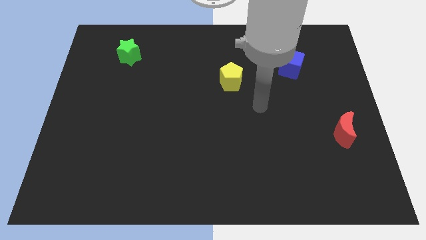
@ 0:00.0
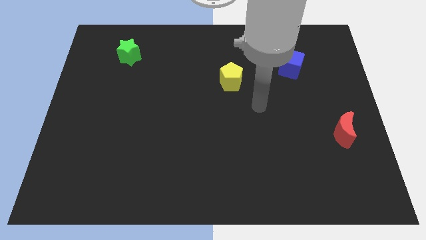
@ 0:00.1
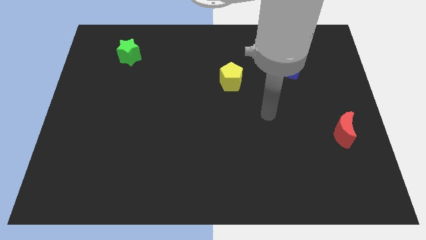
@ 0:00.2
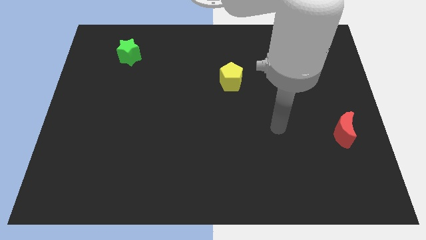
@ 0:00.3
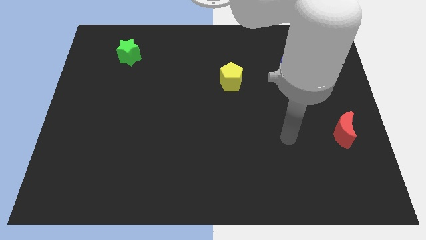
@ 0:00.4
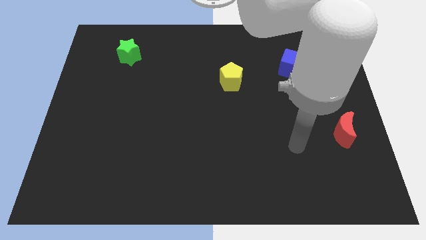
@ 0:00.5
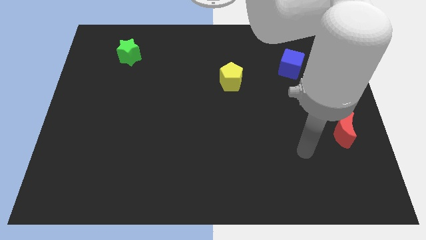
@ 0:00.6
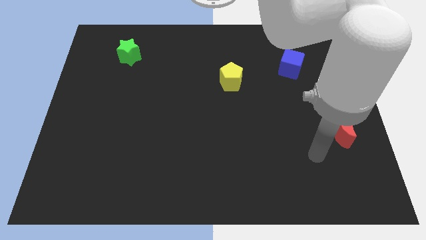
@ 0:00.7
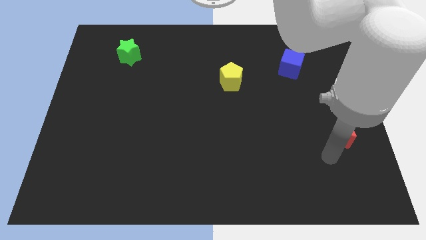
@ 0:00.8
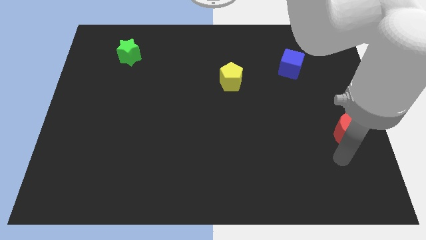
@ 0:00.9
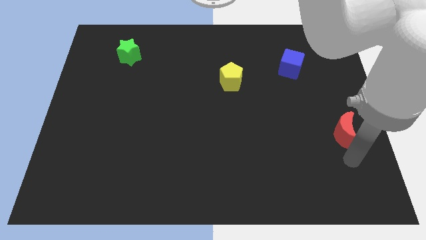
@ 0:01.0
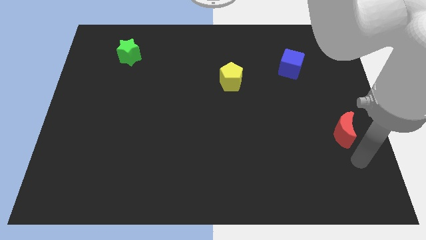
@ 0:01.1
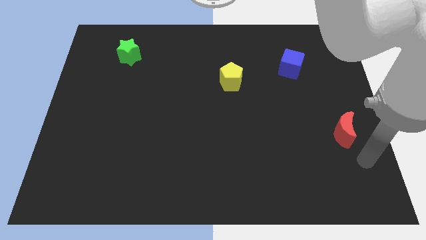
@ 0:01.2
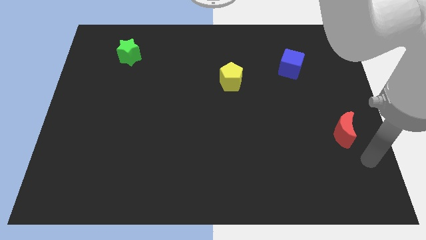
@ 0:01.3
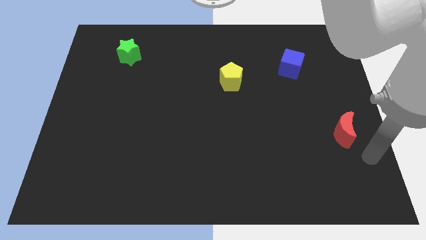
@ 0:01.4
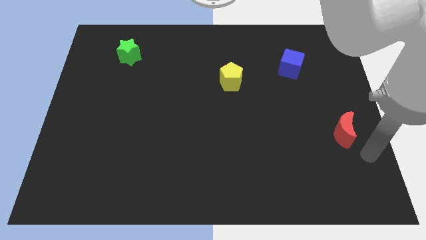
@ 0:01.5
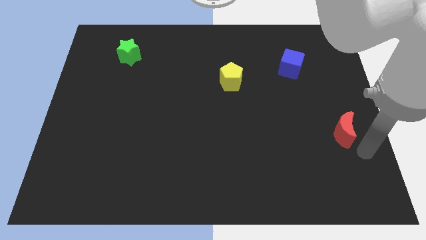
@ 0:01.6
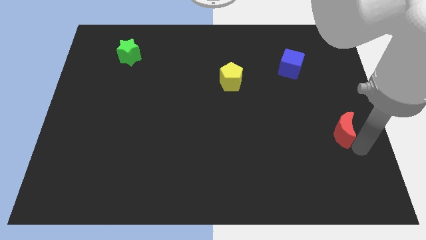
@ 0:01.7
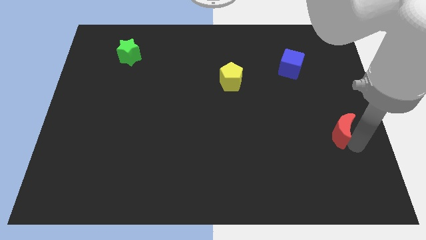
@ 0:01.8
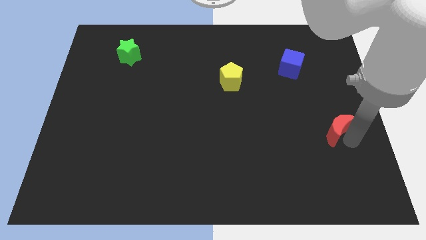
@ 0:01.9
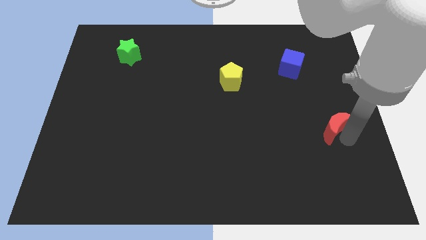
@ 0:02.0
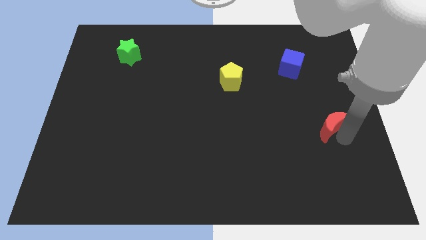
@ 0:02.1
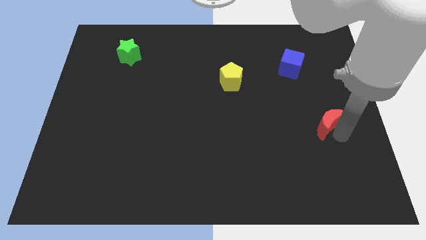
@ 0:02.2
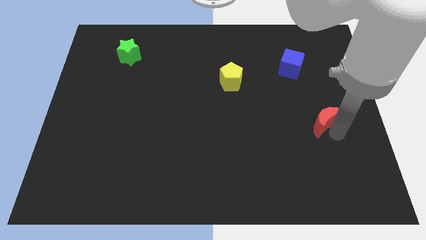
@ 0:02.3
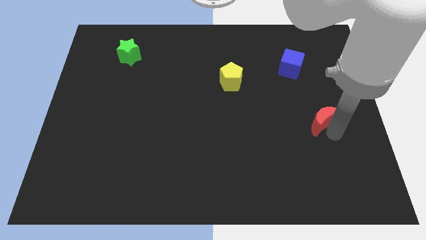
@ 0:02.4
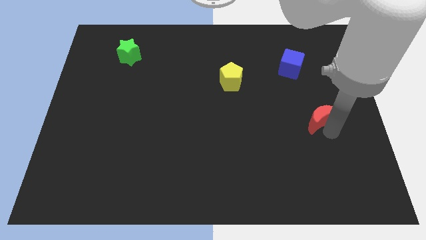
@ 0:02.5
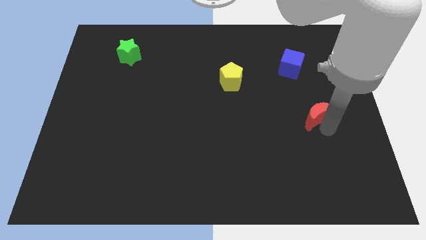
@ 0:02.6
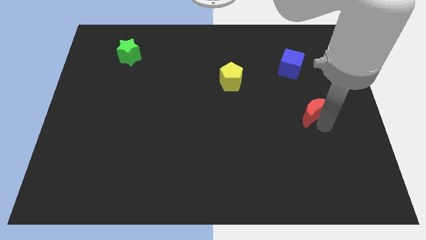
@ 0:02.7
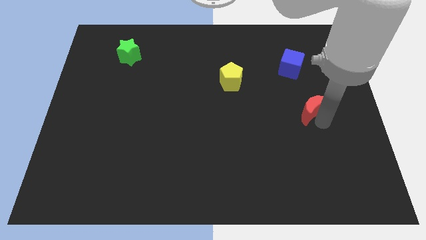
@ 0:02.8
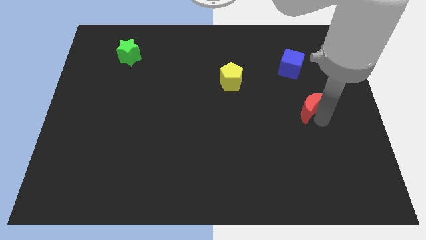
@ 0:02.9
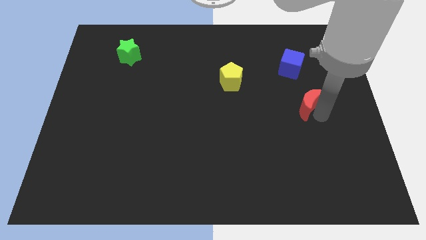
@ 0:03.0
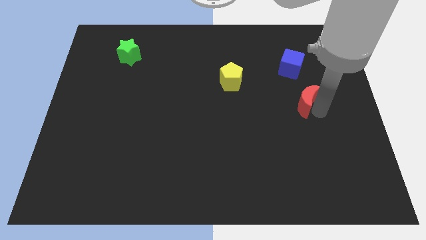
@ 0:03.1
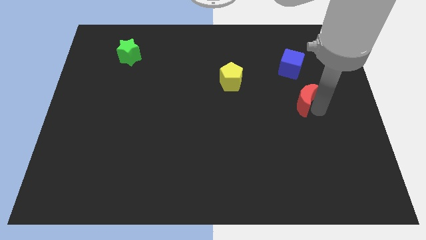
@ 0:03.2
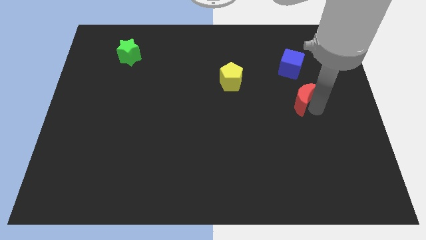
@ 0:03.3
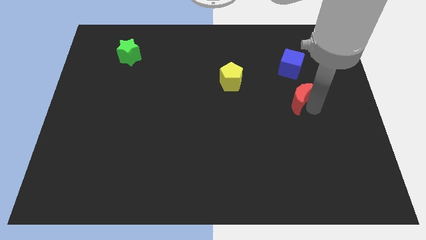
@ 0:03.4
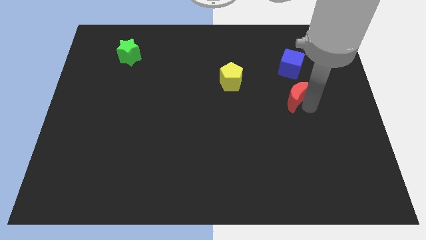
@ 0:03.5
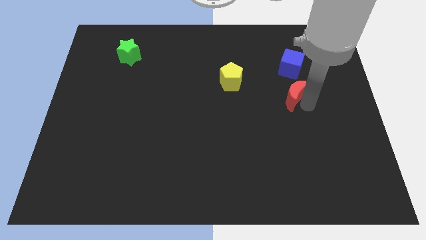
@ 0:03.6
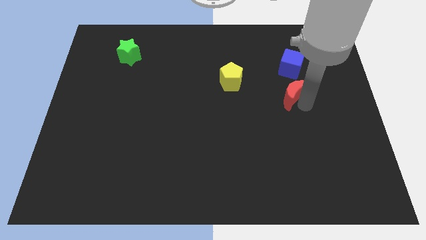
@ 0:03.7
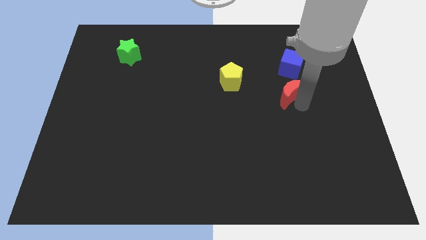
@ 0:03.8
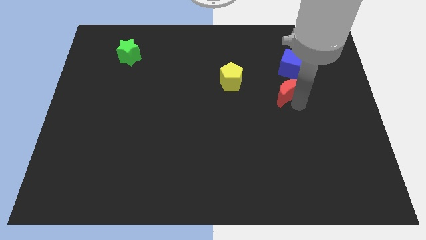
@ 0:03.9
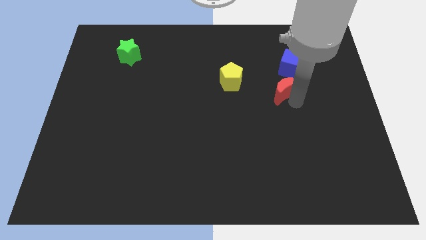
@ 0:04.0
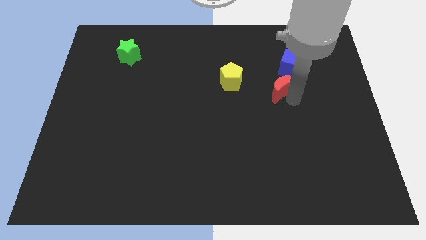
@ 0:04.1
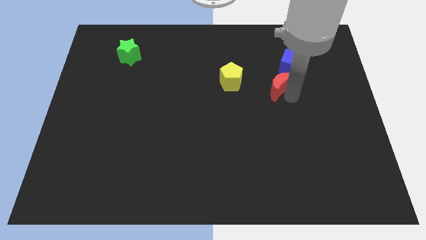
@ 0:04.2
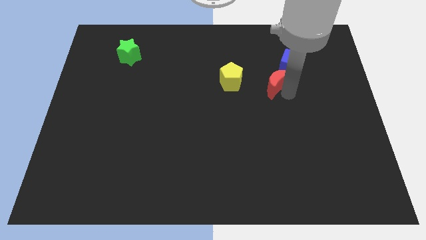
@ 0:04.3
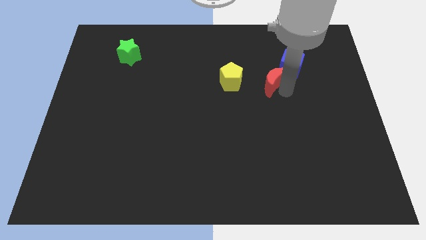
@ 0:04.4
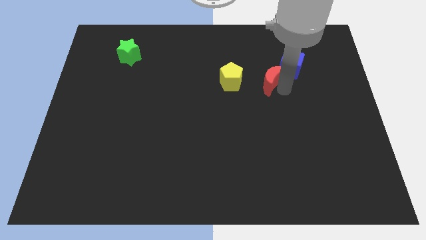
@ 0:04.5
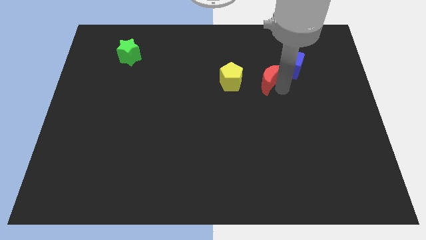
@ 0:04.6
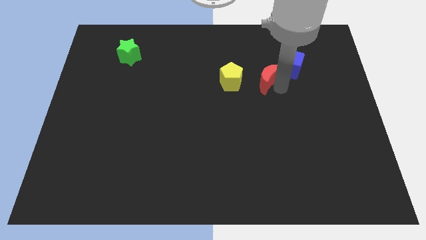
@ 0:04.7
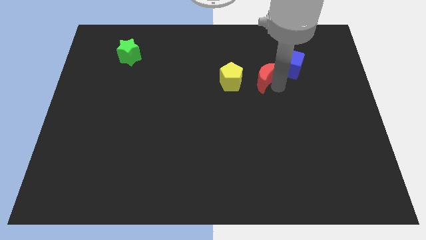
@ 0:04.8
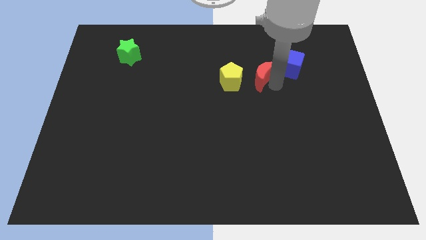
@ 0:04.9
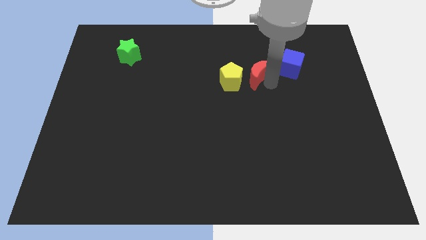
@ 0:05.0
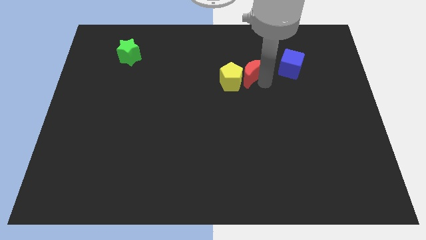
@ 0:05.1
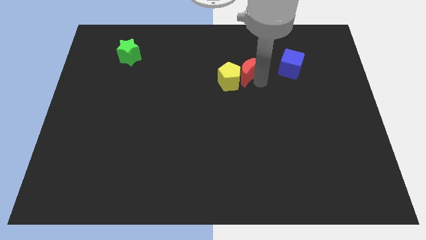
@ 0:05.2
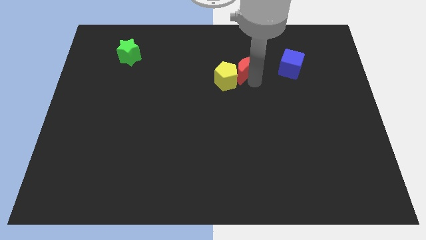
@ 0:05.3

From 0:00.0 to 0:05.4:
put the red block to the yellow block

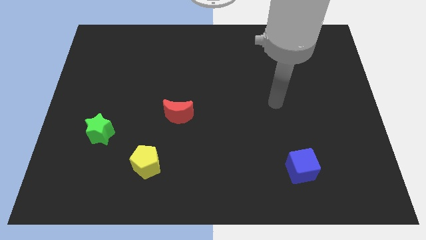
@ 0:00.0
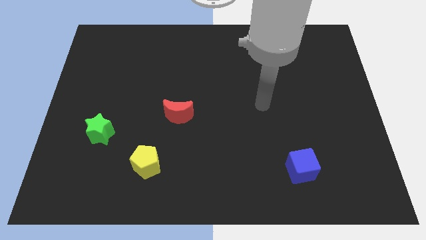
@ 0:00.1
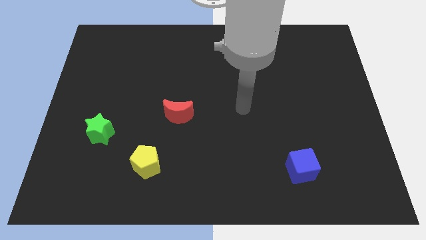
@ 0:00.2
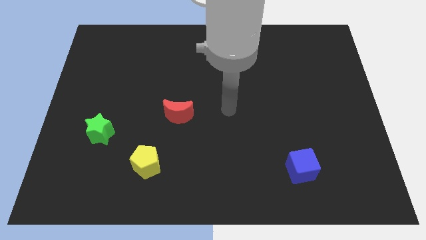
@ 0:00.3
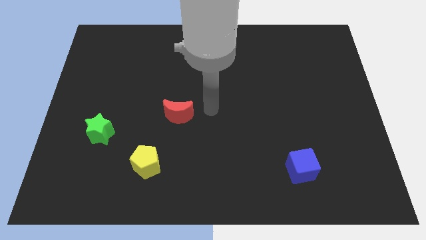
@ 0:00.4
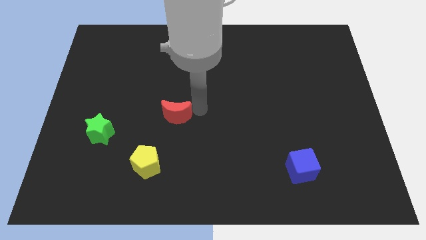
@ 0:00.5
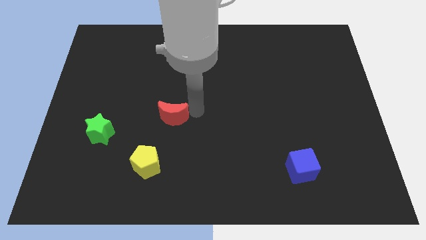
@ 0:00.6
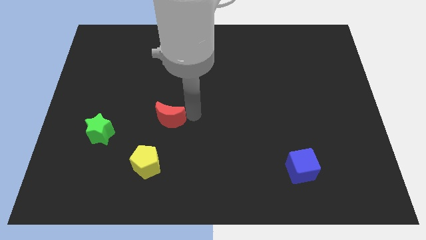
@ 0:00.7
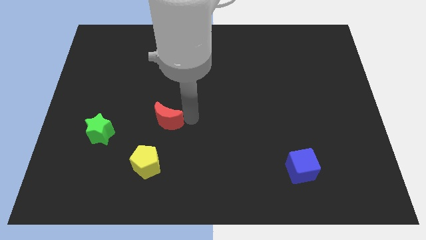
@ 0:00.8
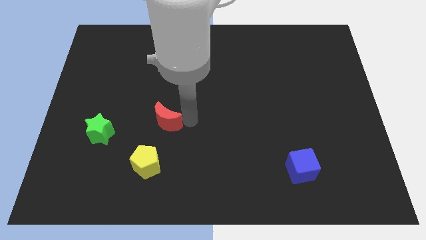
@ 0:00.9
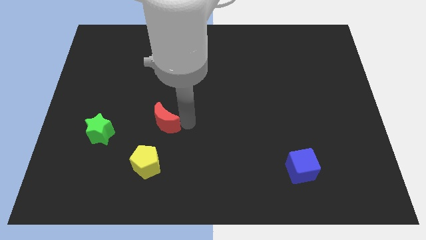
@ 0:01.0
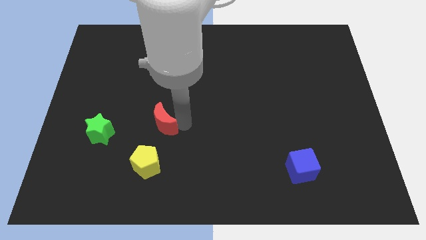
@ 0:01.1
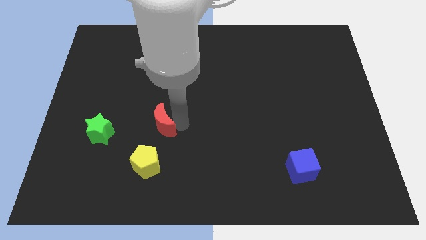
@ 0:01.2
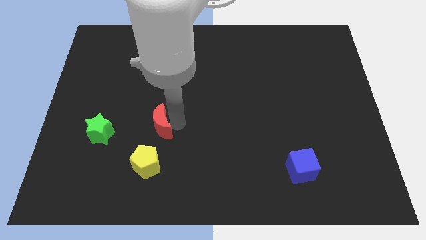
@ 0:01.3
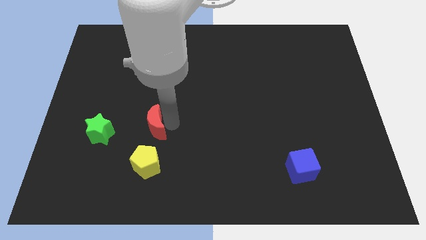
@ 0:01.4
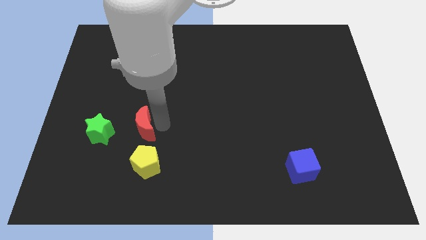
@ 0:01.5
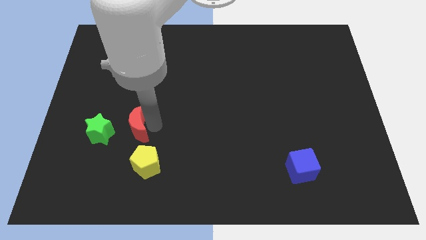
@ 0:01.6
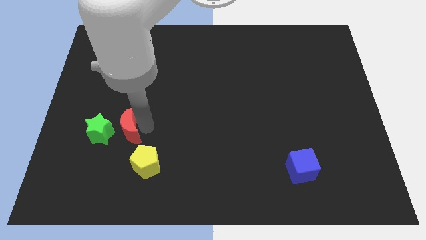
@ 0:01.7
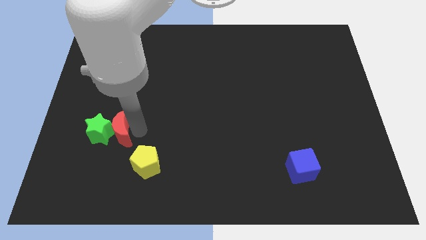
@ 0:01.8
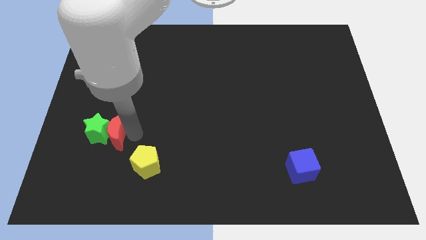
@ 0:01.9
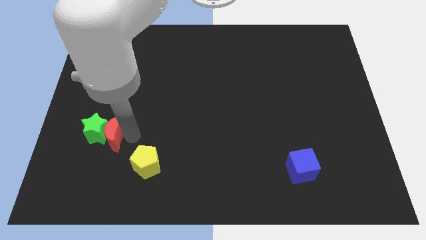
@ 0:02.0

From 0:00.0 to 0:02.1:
move the red moon to the star

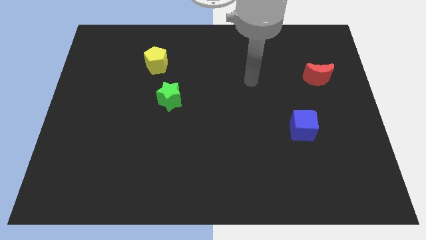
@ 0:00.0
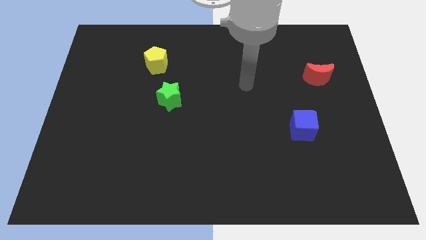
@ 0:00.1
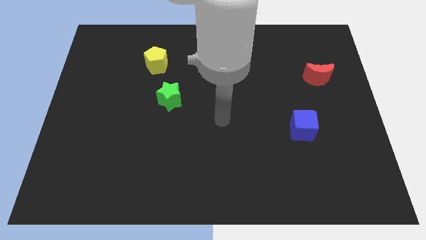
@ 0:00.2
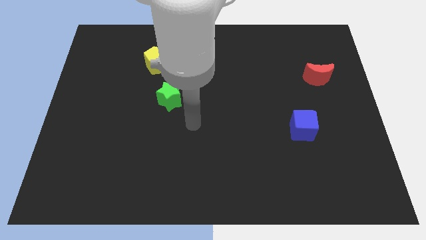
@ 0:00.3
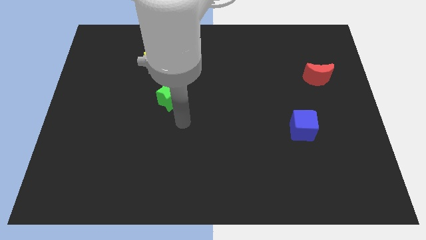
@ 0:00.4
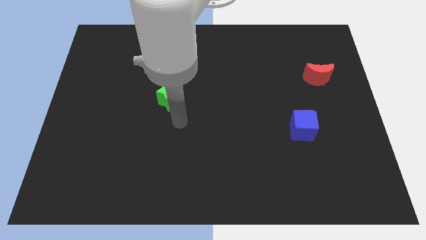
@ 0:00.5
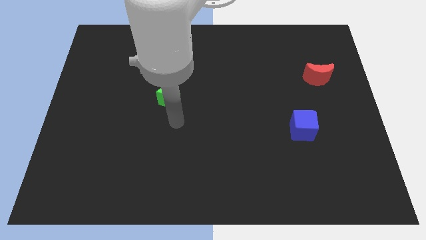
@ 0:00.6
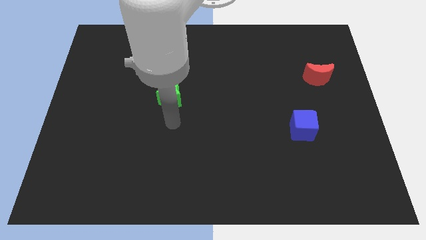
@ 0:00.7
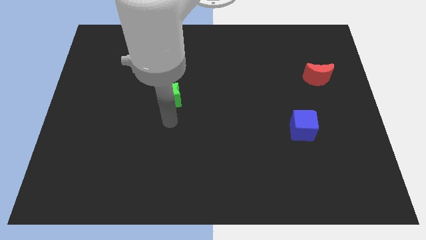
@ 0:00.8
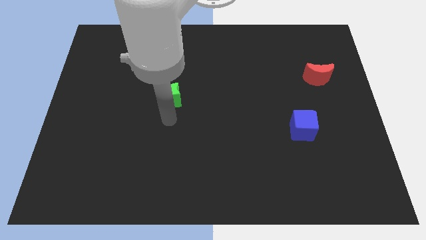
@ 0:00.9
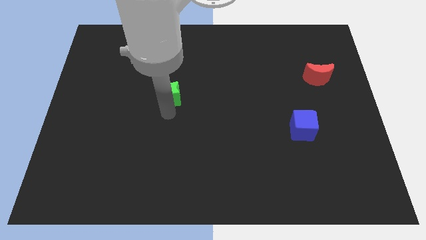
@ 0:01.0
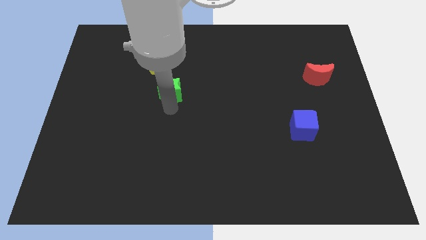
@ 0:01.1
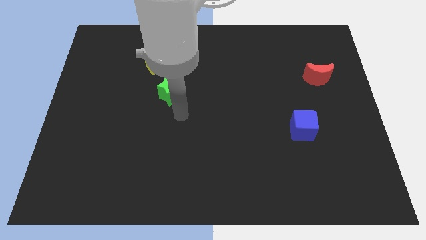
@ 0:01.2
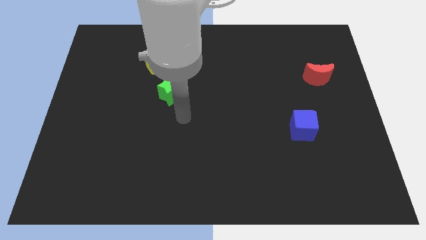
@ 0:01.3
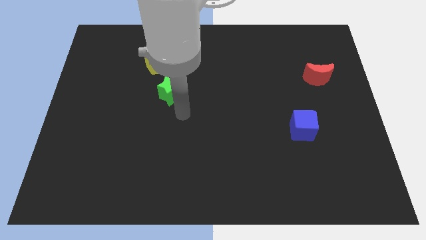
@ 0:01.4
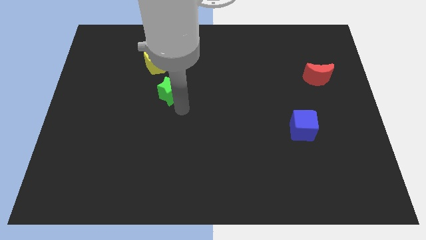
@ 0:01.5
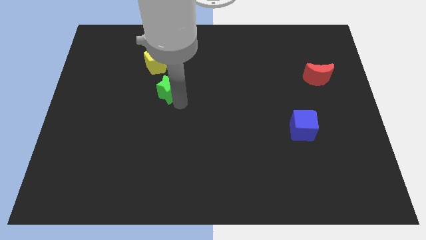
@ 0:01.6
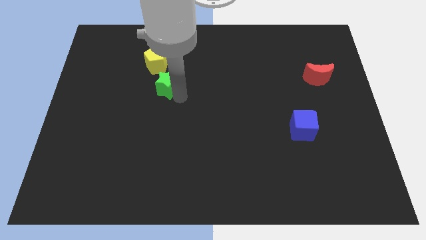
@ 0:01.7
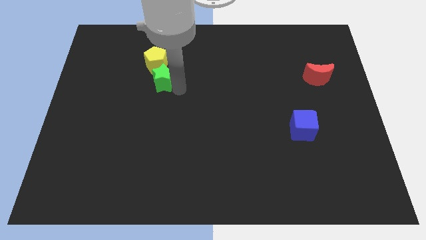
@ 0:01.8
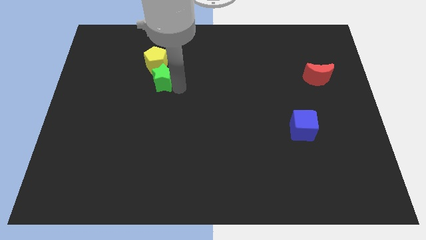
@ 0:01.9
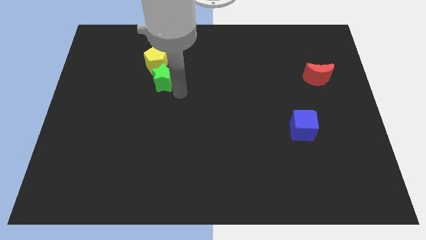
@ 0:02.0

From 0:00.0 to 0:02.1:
move the green block next to the yellow pentagon
